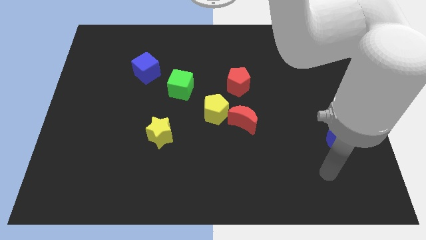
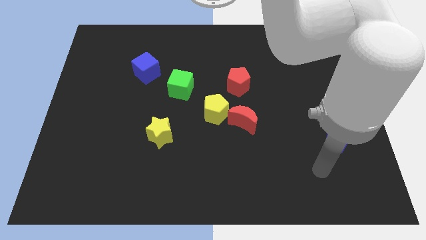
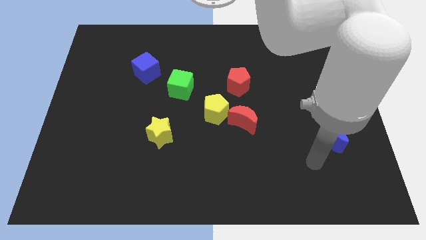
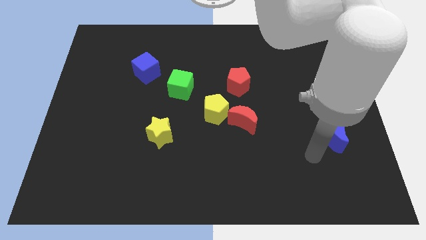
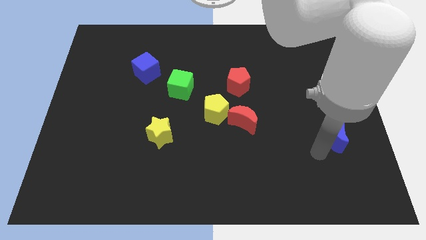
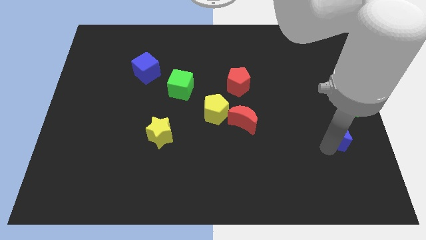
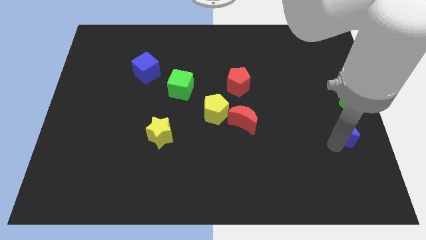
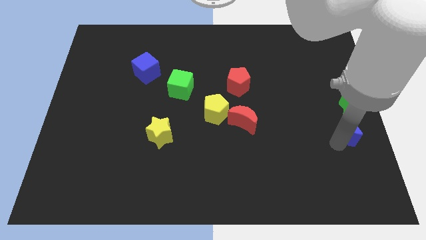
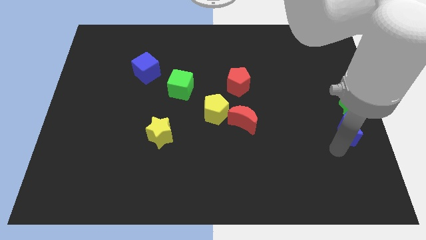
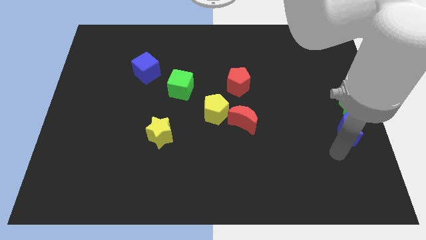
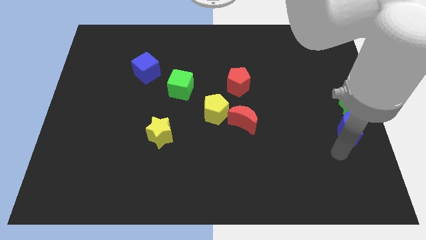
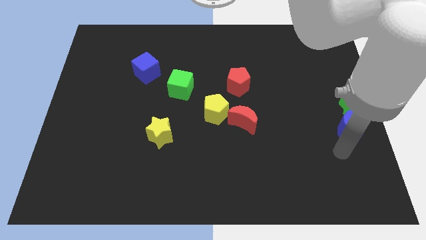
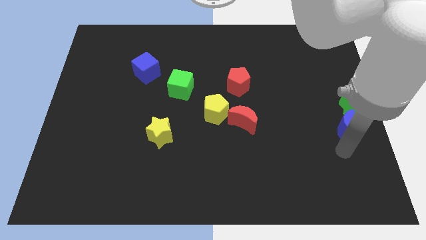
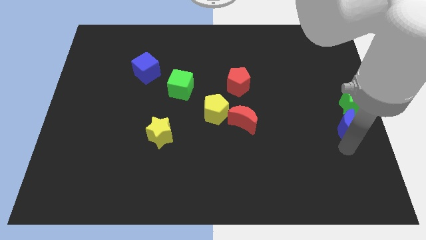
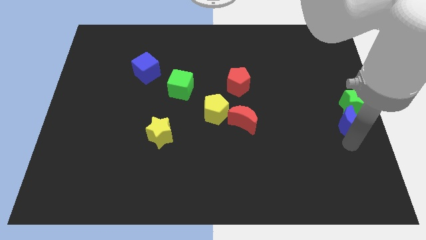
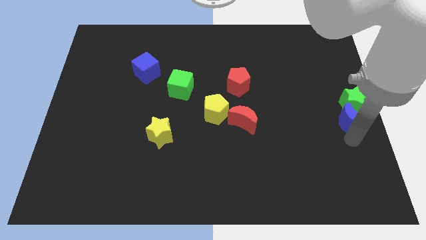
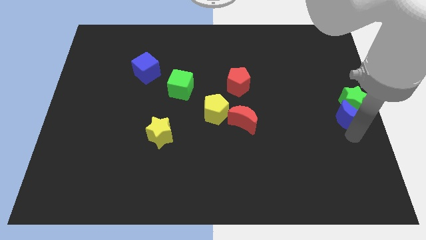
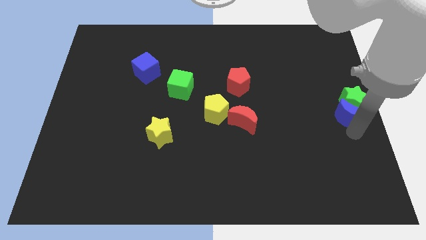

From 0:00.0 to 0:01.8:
place the blue moon at the center right corner

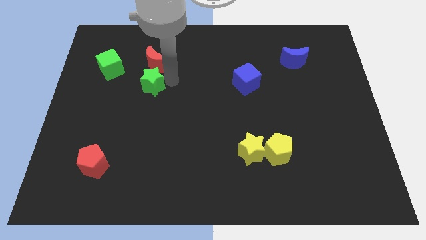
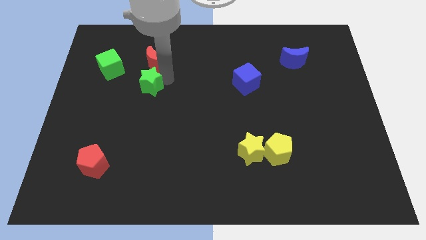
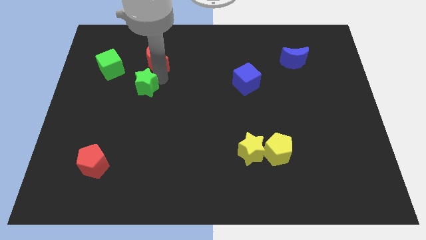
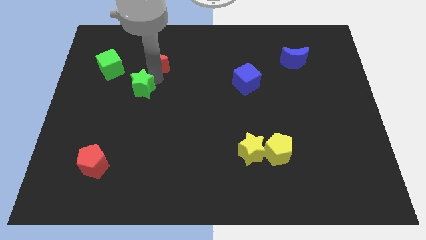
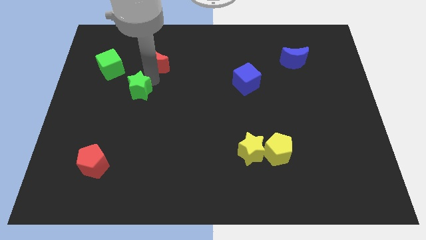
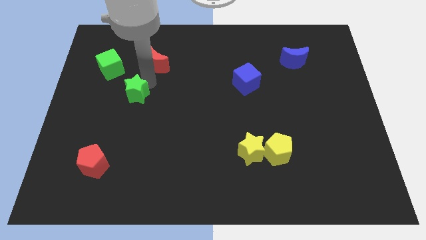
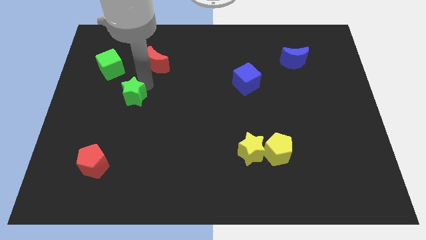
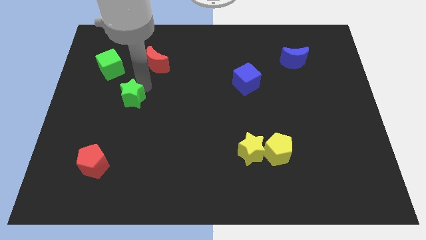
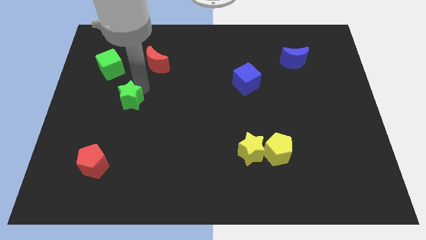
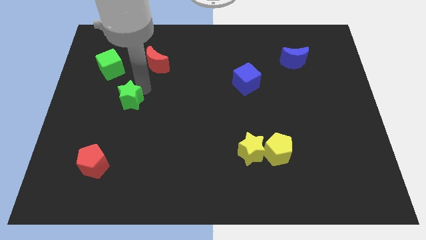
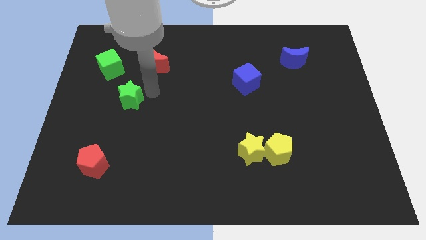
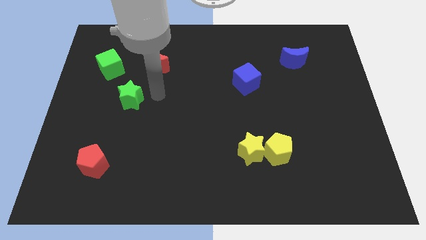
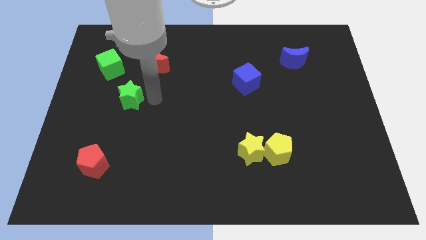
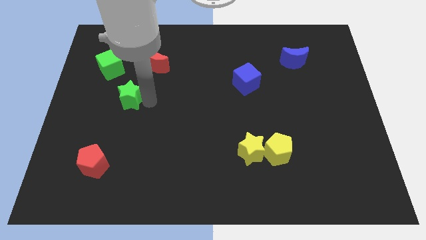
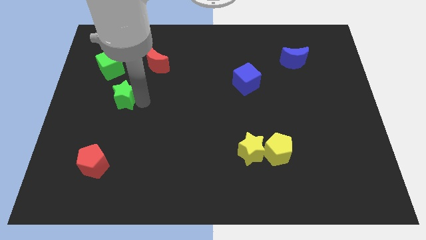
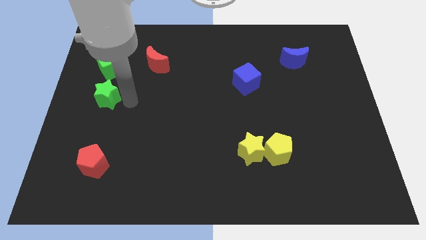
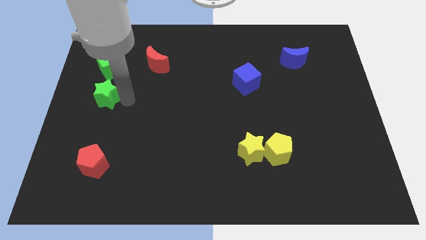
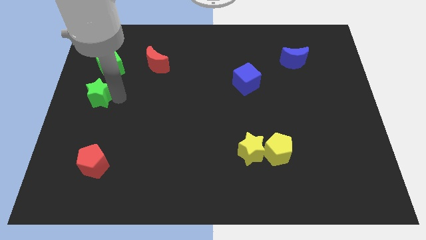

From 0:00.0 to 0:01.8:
push the green star below the green cube

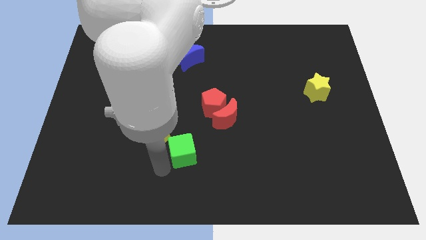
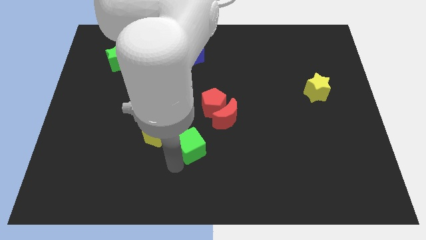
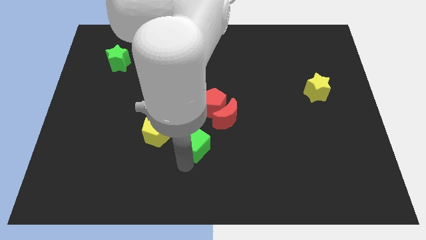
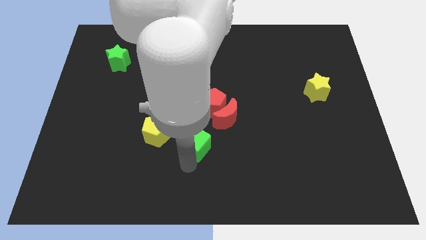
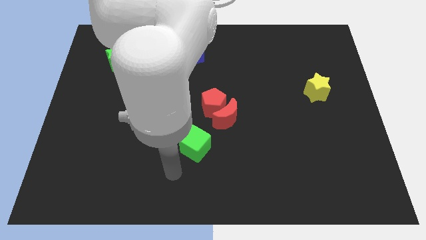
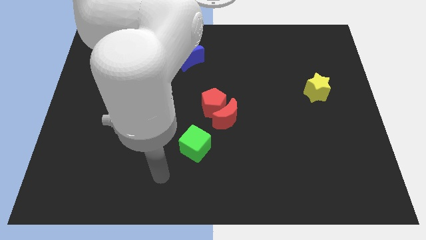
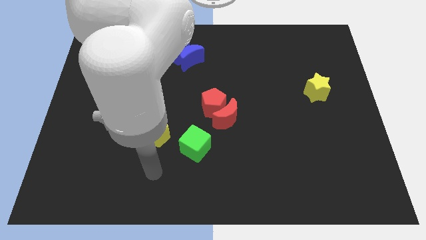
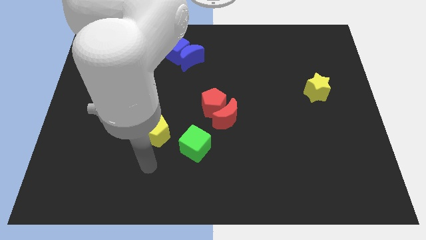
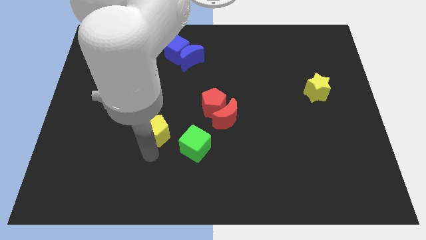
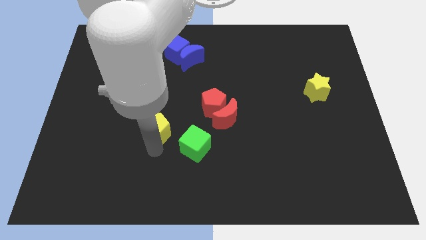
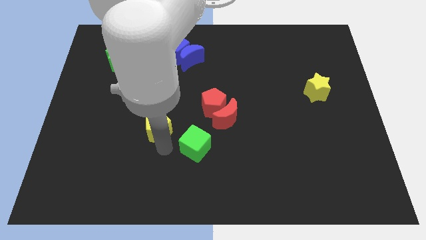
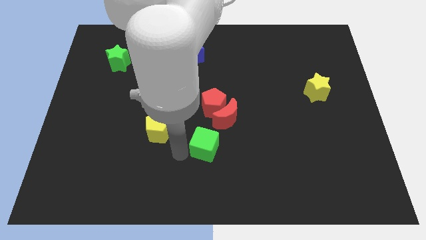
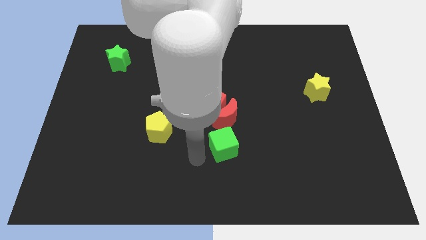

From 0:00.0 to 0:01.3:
place the green cube below the red crescent

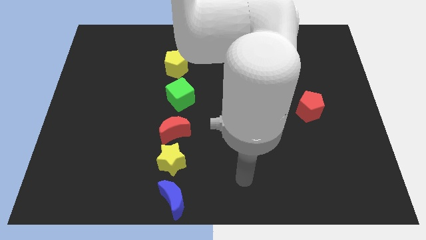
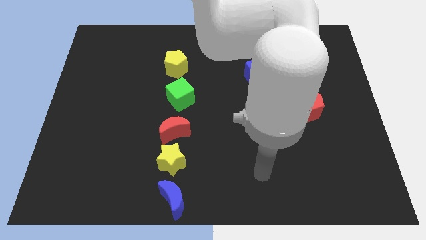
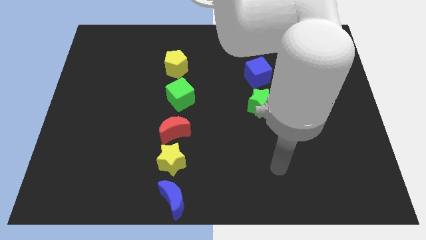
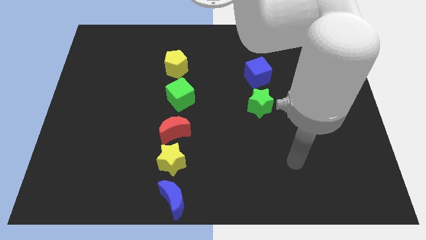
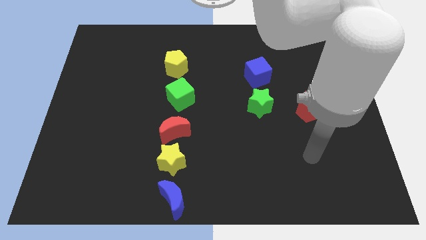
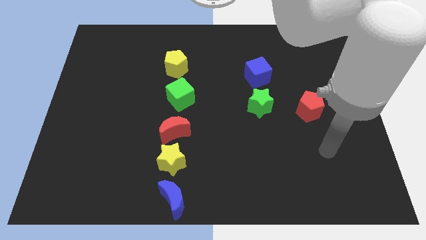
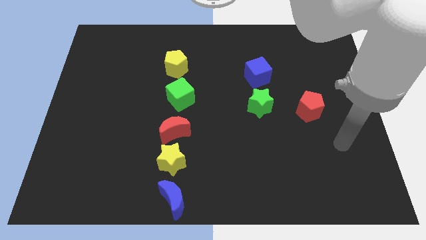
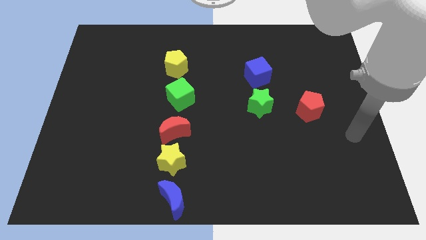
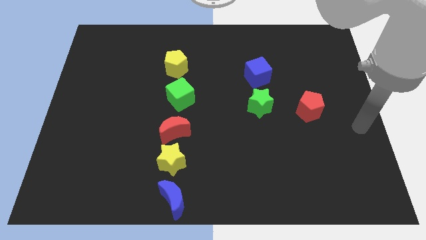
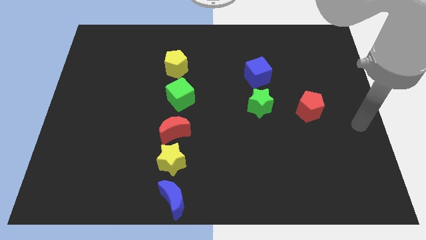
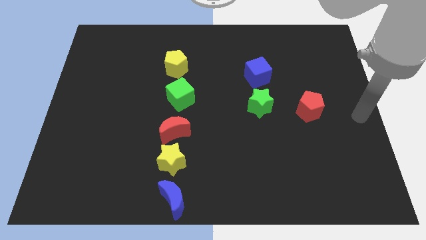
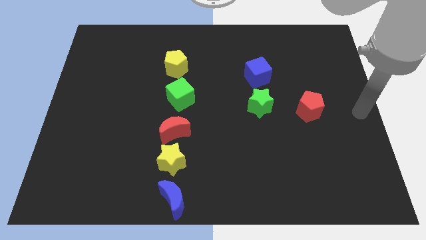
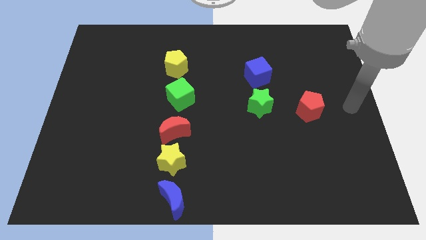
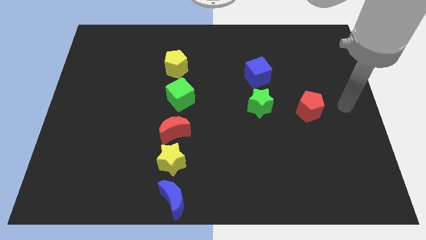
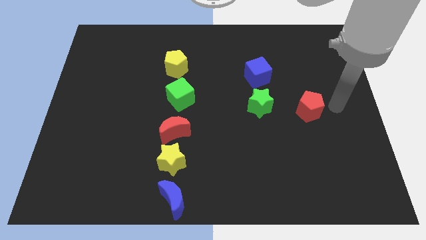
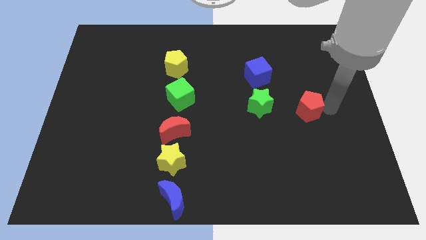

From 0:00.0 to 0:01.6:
move your arm to the right of right pentagon

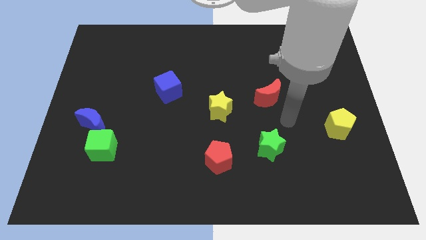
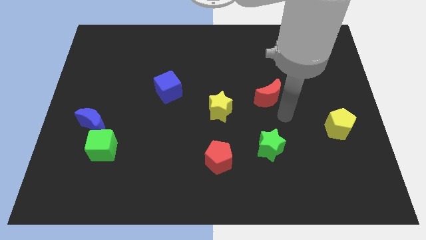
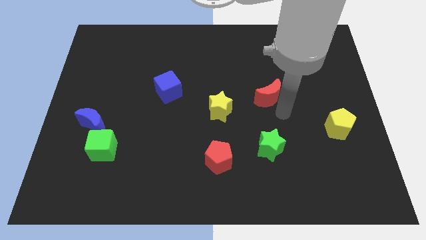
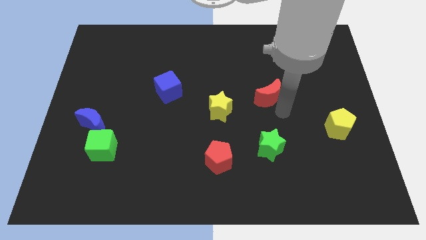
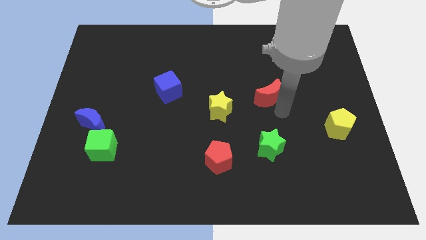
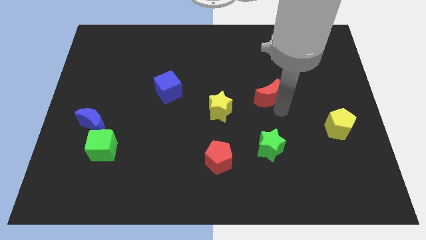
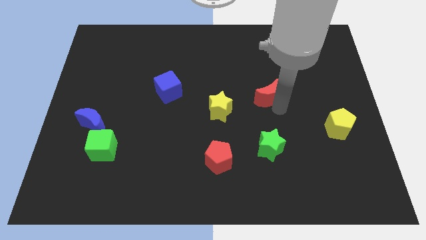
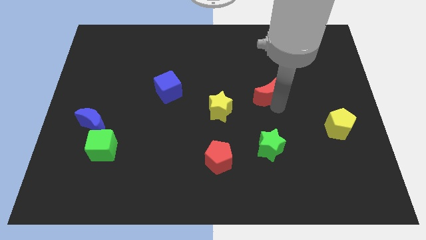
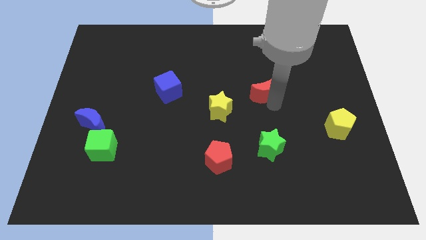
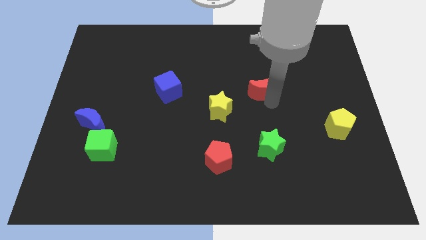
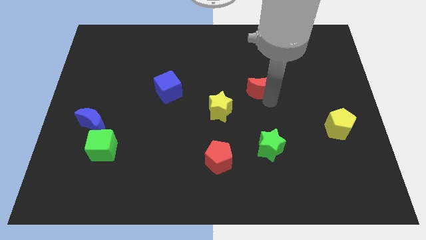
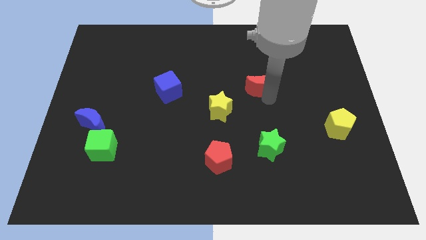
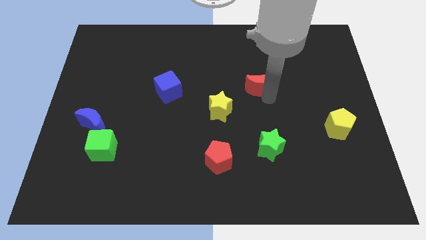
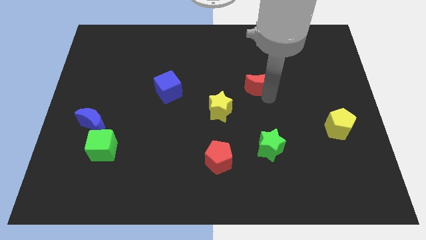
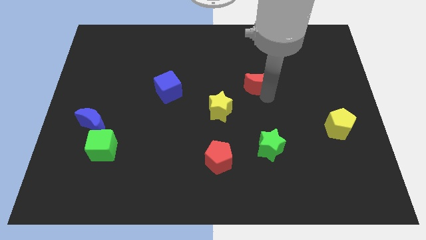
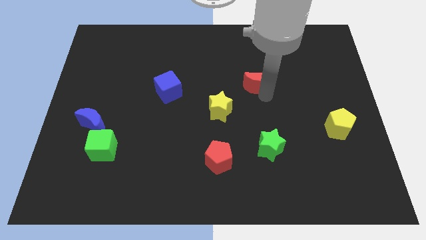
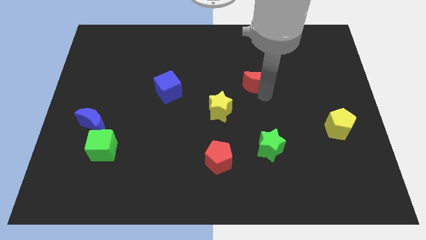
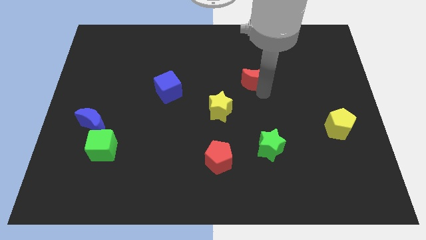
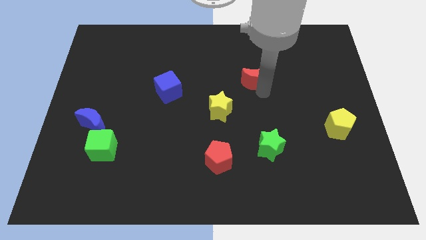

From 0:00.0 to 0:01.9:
push the red crescent towards the top of the board

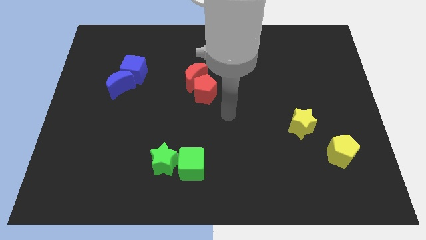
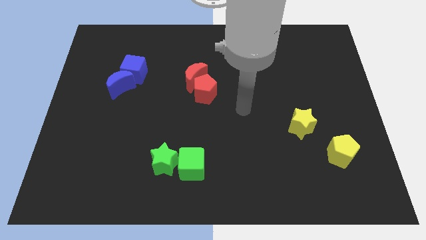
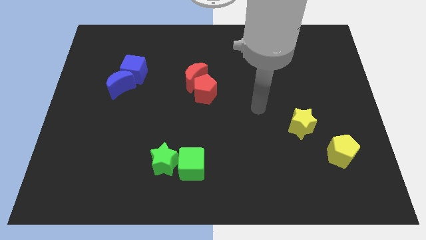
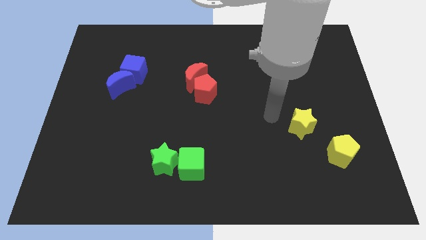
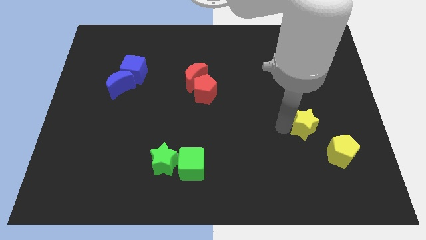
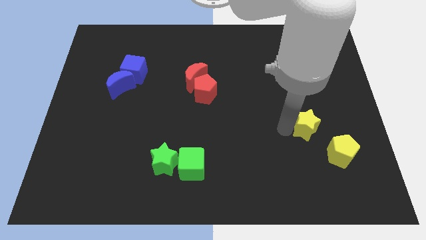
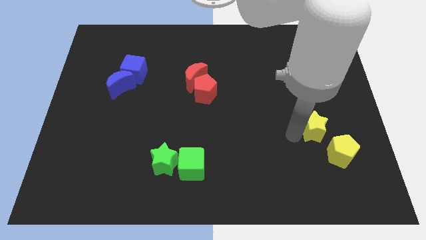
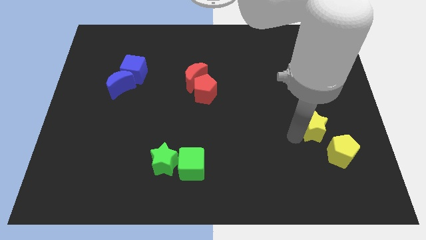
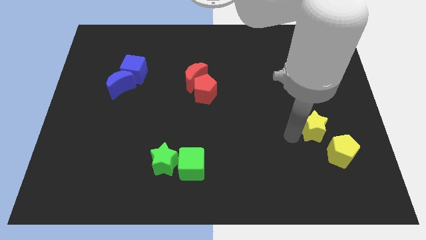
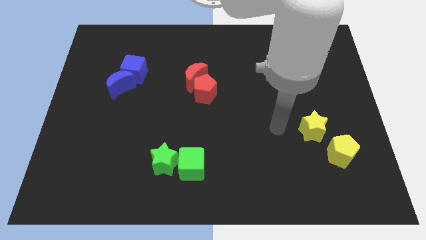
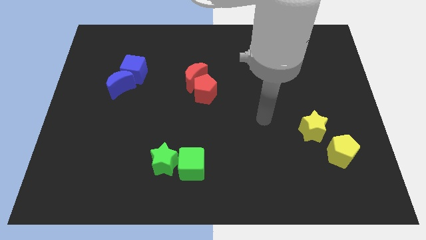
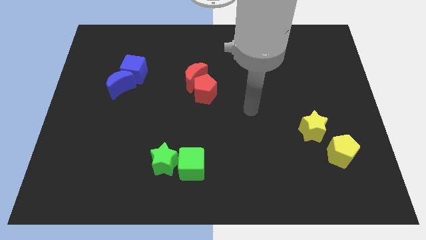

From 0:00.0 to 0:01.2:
push yellow star towards yellow pentagon
